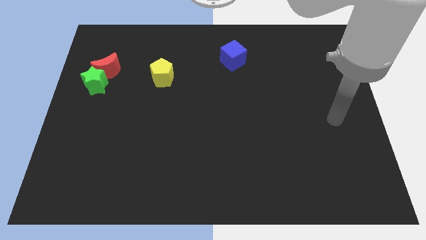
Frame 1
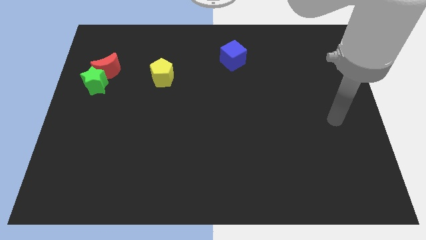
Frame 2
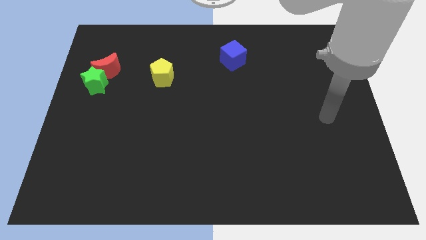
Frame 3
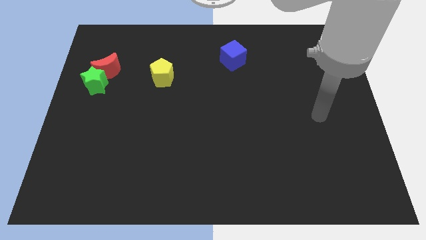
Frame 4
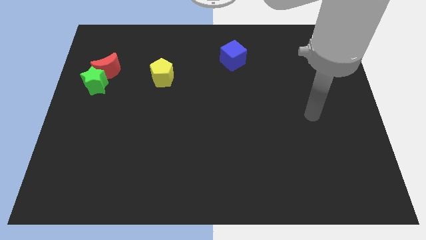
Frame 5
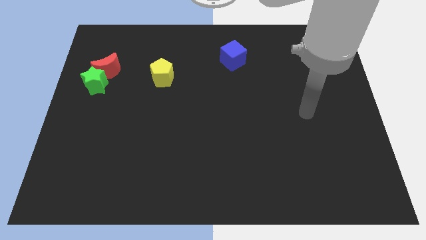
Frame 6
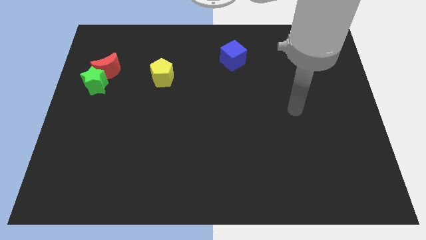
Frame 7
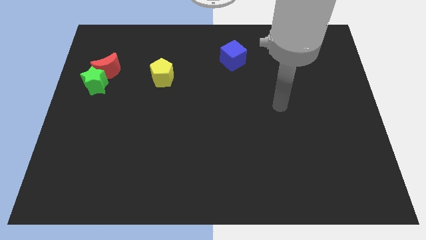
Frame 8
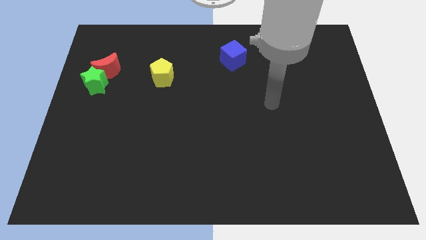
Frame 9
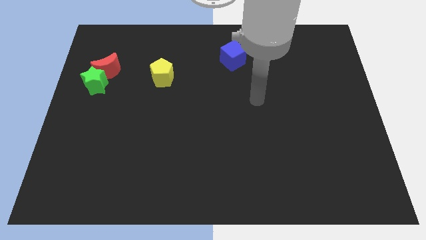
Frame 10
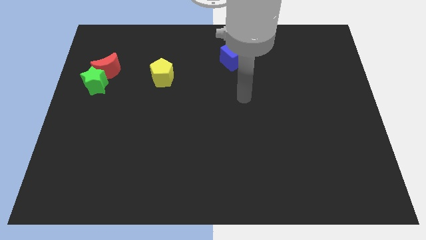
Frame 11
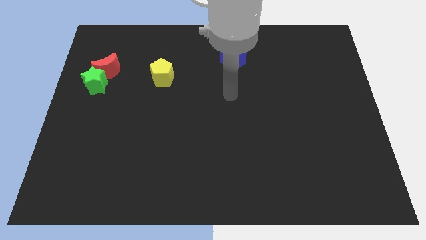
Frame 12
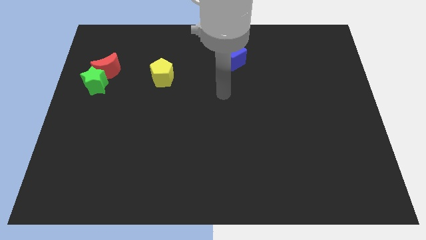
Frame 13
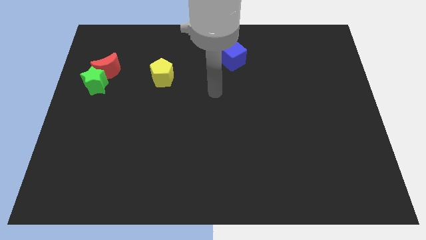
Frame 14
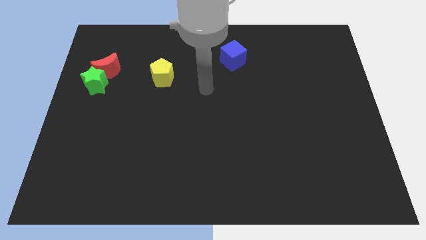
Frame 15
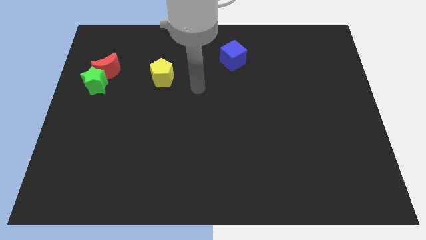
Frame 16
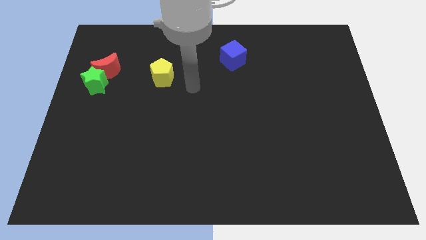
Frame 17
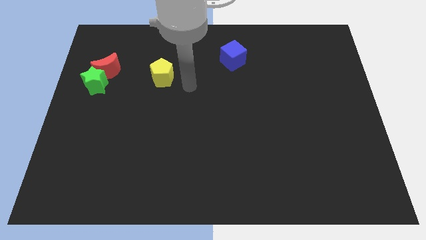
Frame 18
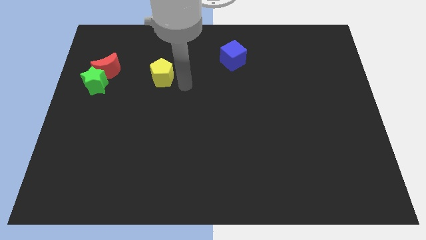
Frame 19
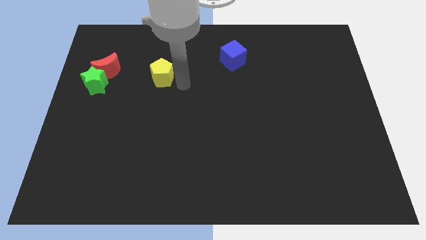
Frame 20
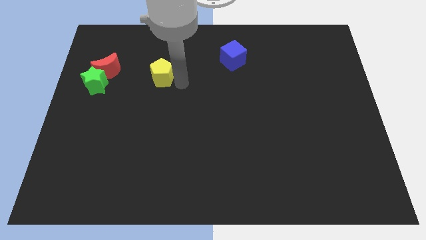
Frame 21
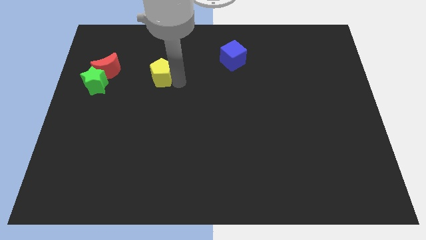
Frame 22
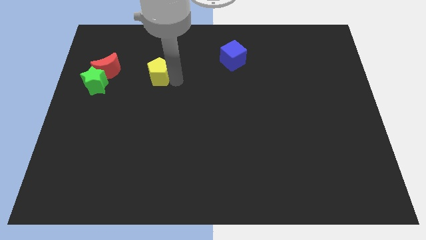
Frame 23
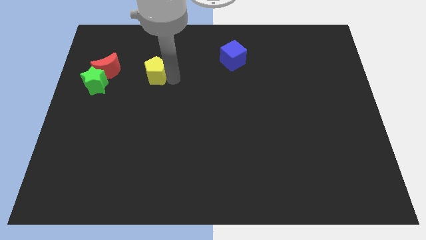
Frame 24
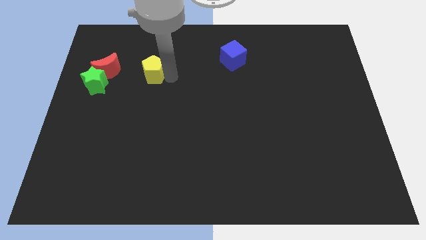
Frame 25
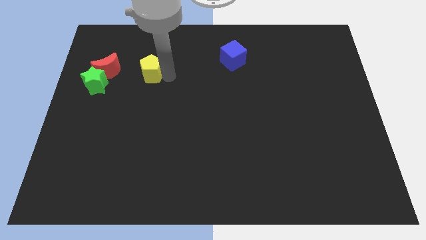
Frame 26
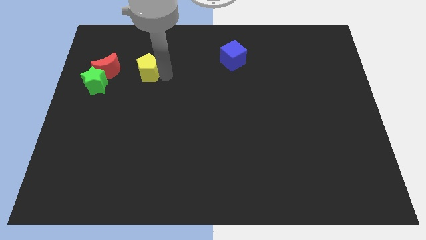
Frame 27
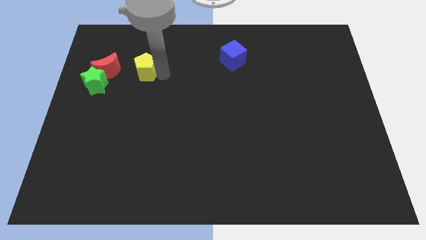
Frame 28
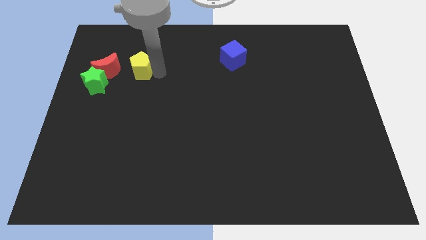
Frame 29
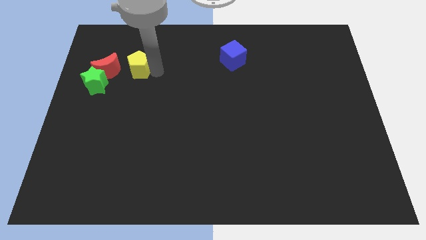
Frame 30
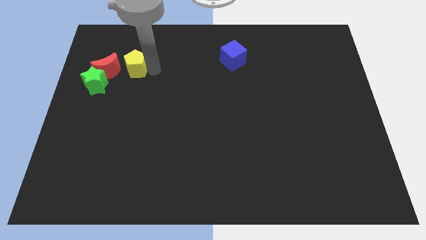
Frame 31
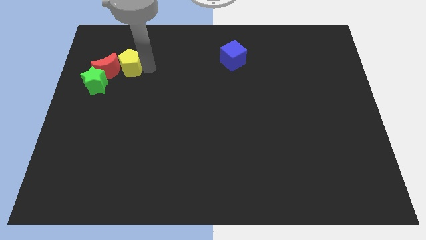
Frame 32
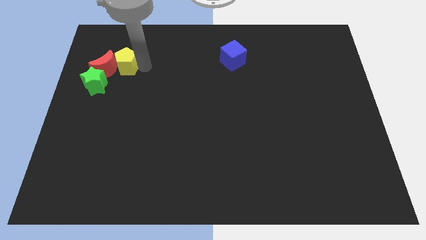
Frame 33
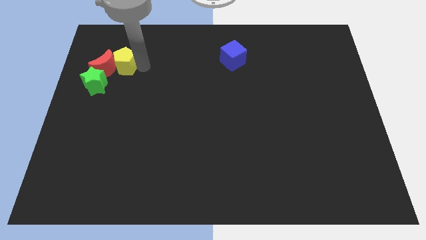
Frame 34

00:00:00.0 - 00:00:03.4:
push the yellow block next to the red moon

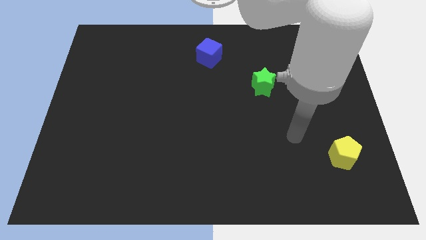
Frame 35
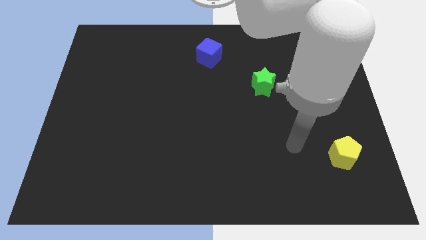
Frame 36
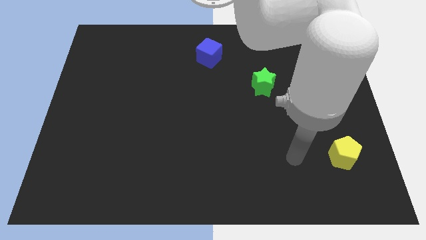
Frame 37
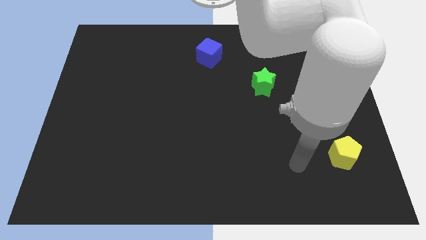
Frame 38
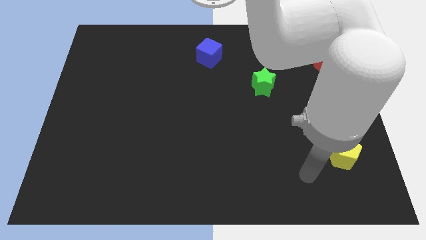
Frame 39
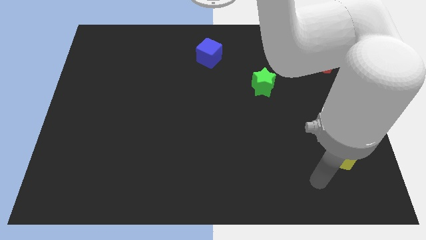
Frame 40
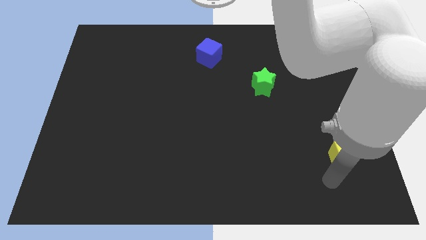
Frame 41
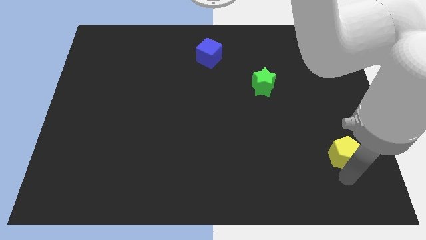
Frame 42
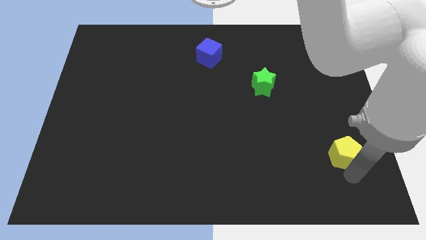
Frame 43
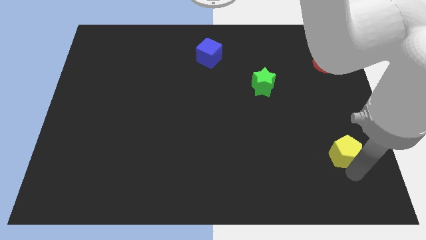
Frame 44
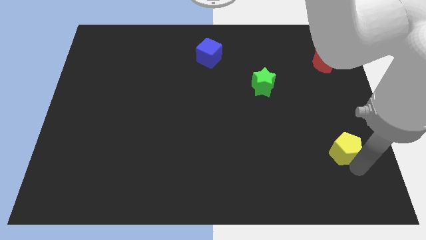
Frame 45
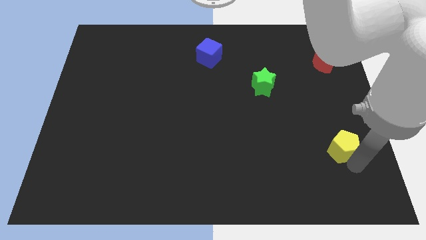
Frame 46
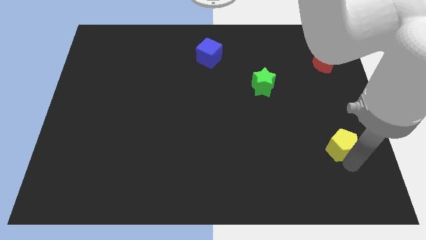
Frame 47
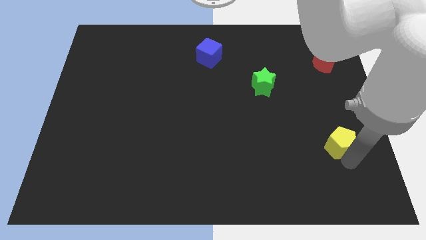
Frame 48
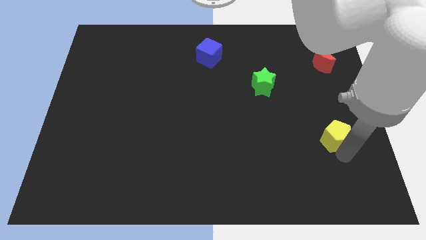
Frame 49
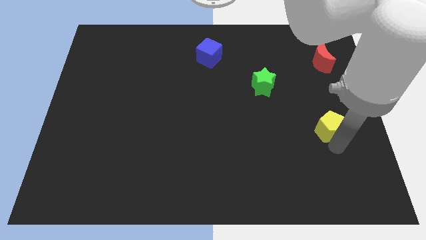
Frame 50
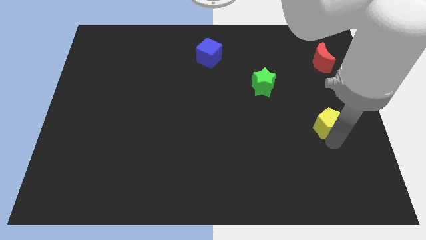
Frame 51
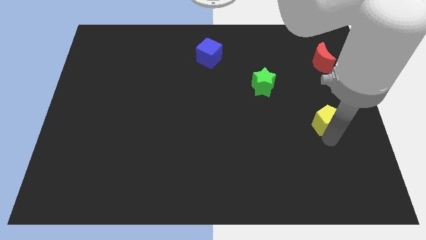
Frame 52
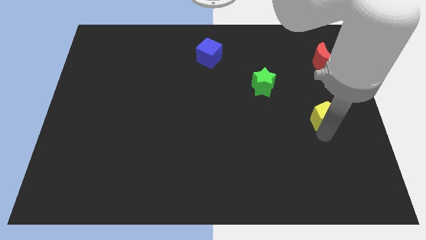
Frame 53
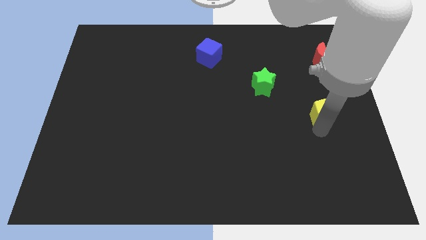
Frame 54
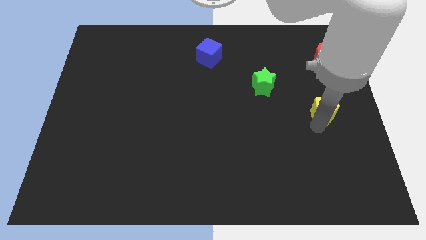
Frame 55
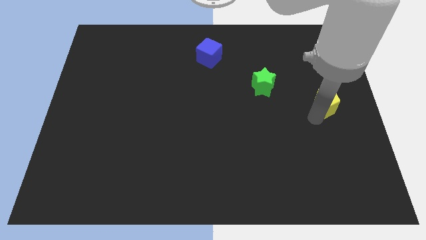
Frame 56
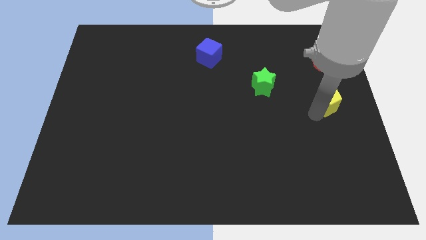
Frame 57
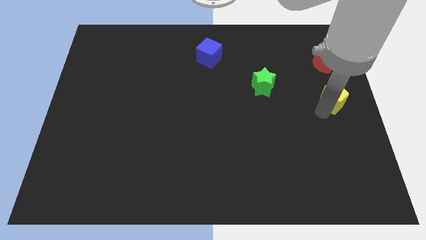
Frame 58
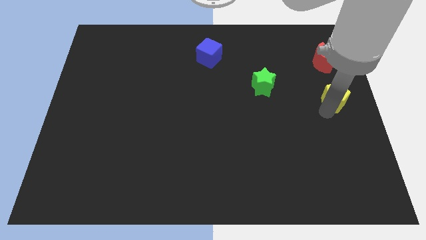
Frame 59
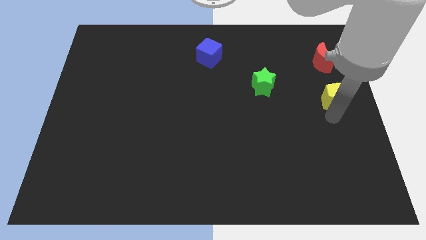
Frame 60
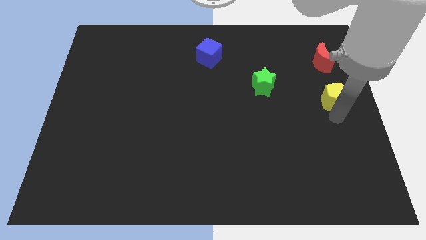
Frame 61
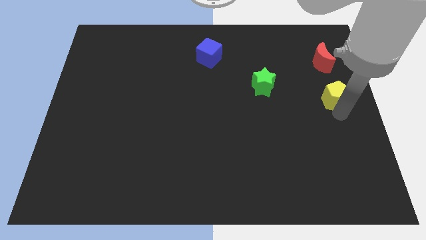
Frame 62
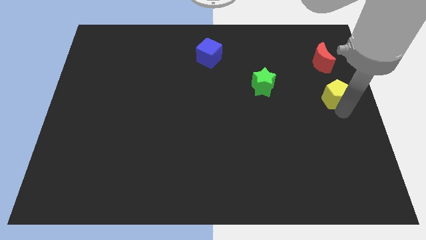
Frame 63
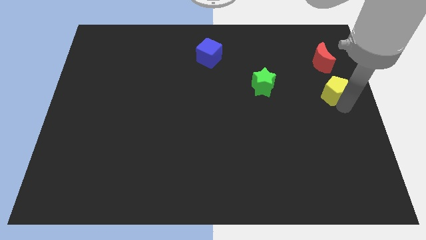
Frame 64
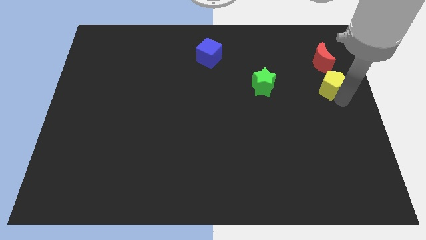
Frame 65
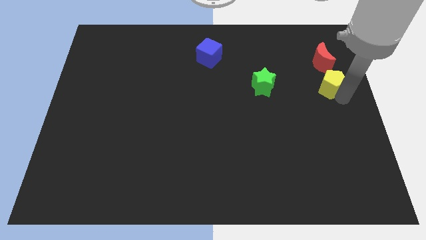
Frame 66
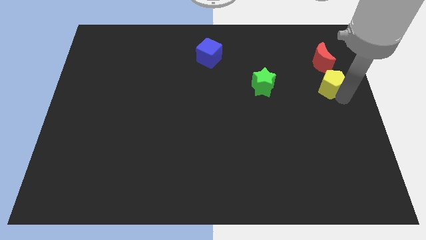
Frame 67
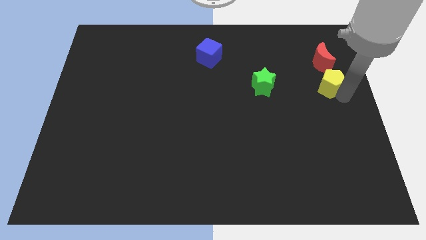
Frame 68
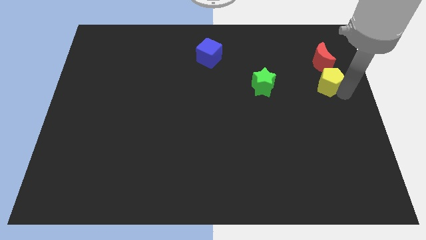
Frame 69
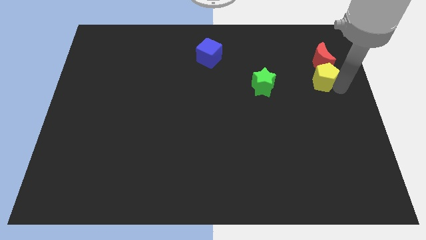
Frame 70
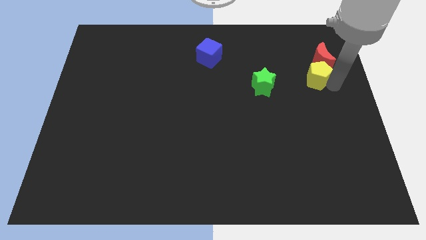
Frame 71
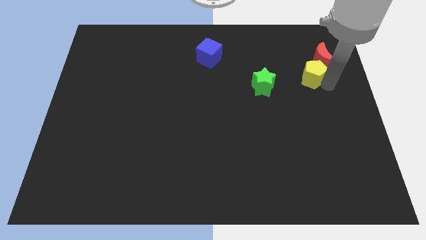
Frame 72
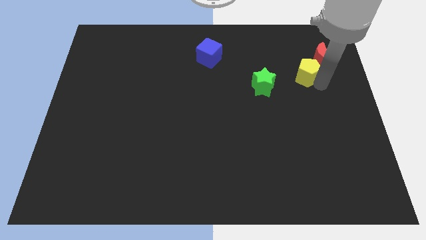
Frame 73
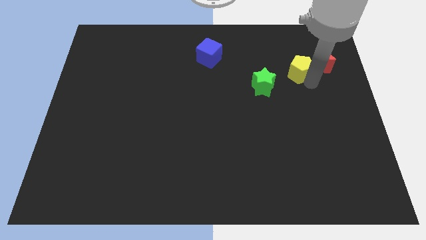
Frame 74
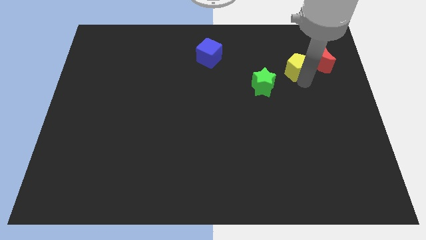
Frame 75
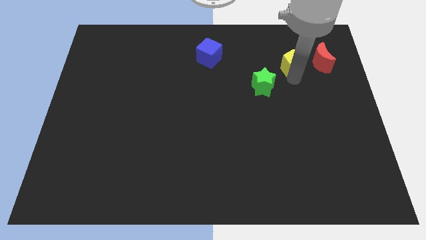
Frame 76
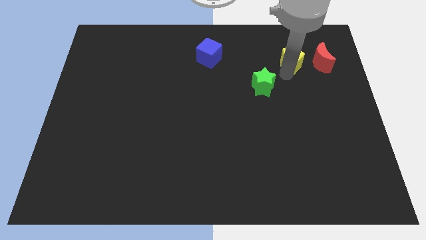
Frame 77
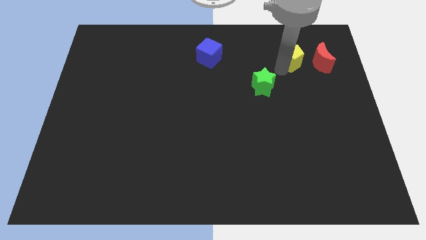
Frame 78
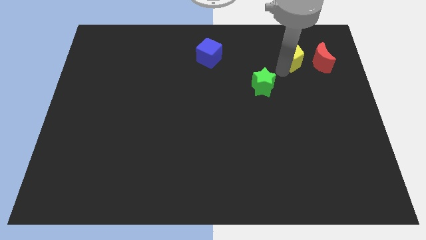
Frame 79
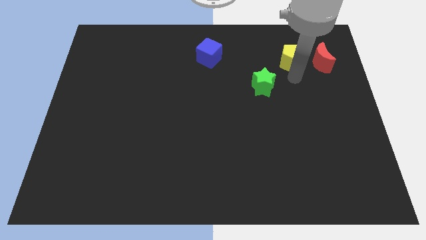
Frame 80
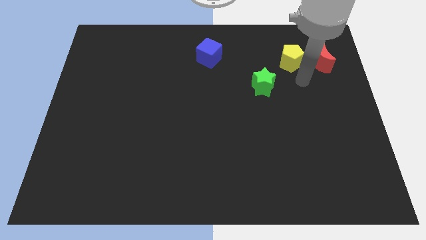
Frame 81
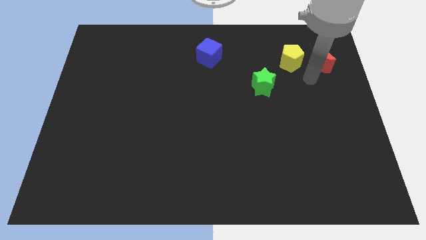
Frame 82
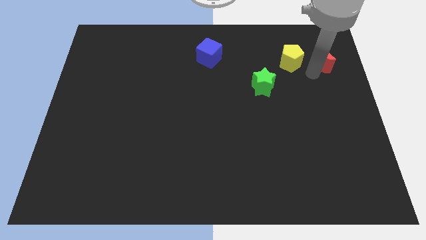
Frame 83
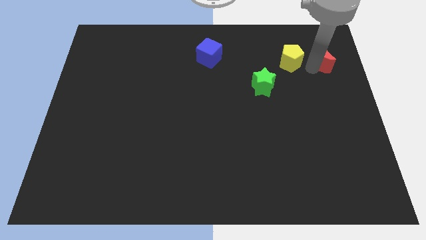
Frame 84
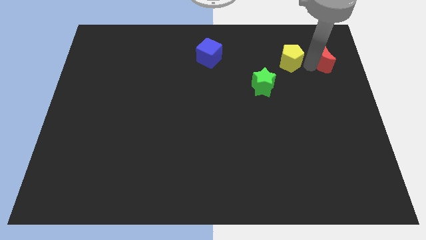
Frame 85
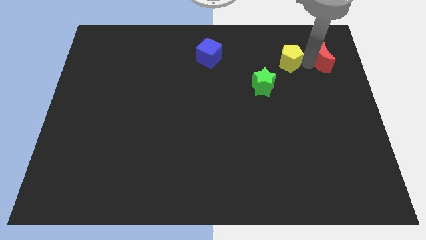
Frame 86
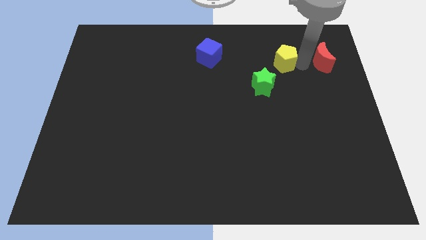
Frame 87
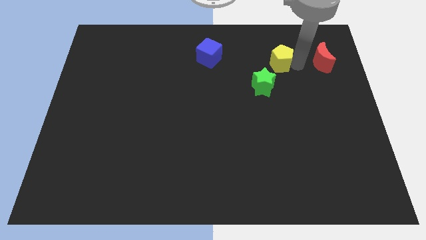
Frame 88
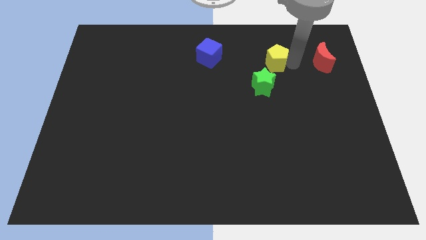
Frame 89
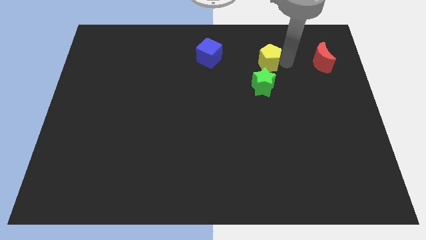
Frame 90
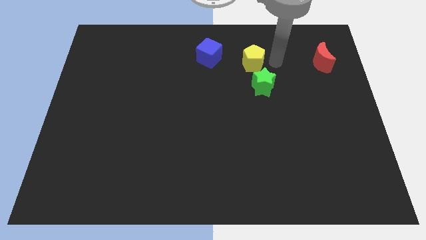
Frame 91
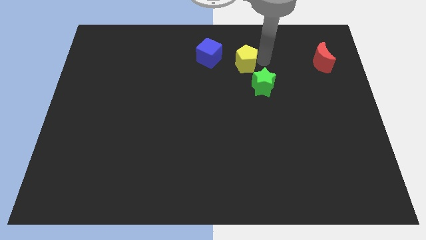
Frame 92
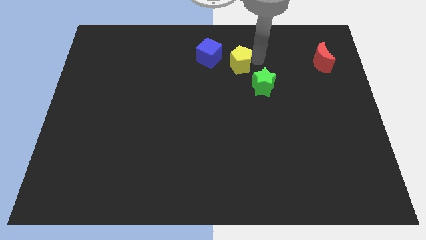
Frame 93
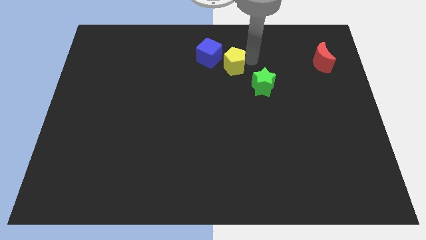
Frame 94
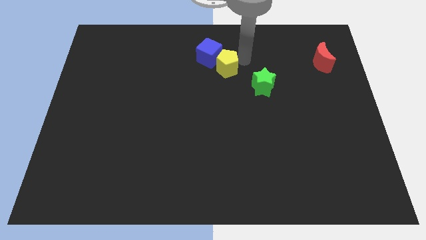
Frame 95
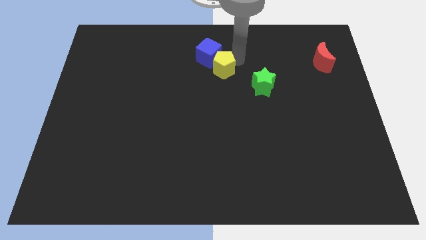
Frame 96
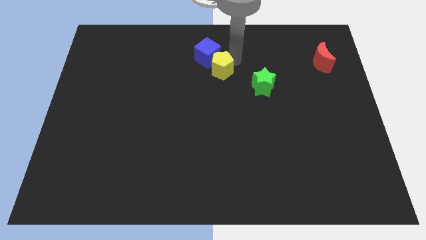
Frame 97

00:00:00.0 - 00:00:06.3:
move the yellow pentagon to the cube
